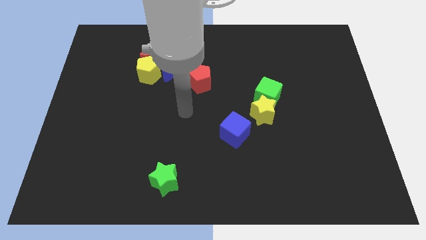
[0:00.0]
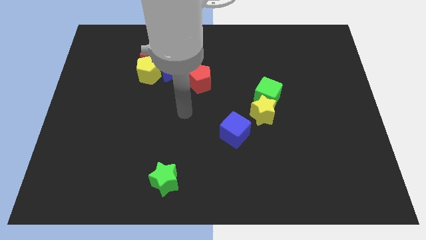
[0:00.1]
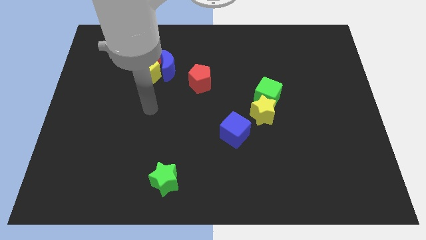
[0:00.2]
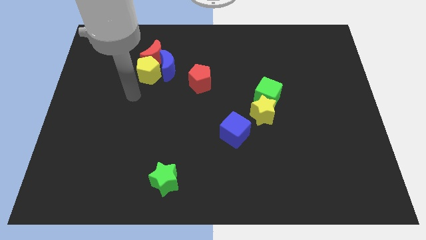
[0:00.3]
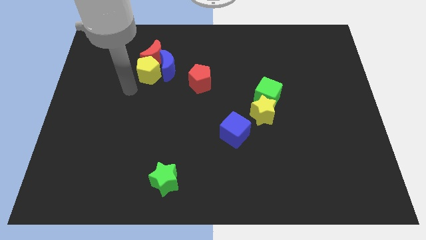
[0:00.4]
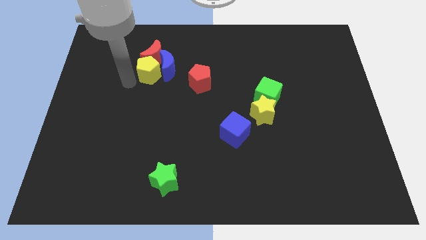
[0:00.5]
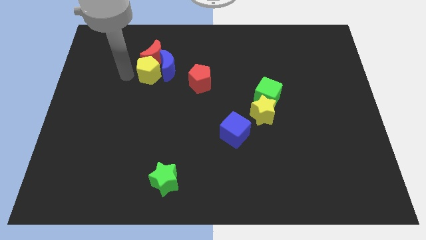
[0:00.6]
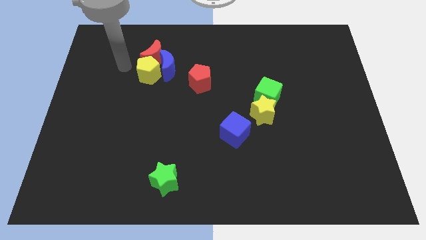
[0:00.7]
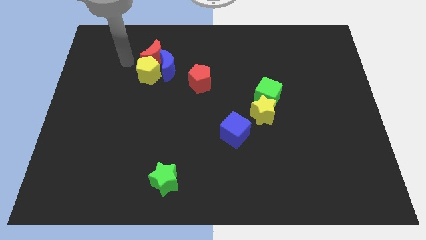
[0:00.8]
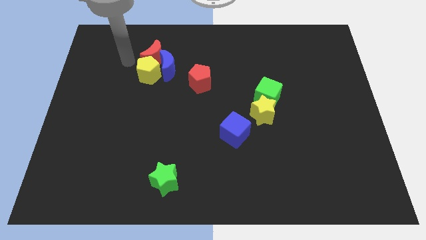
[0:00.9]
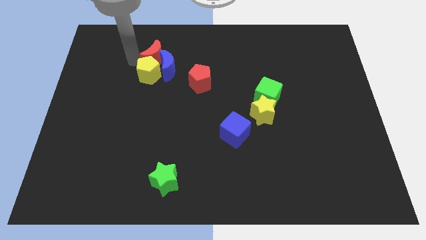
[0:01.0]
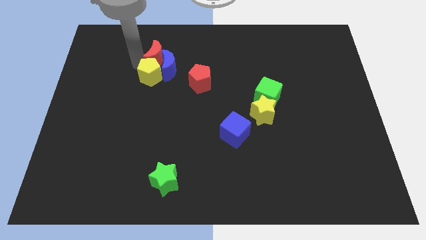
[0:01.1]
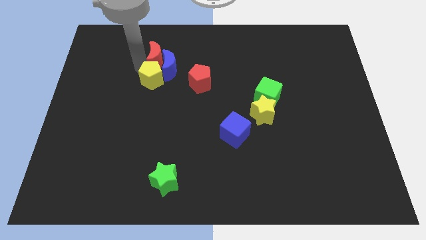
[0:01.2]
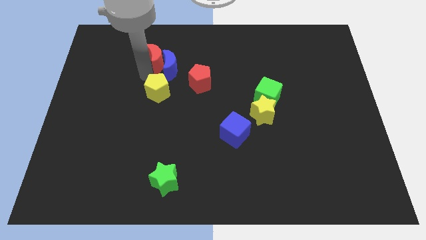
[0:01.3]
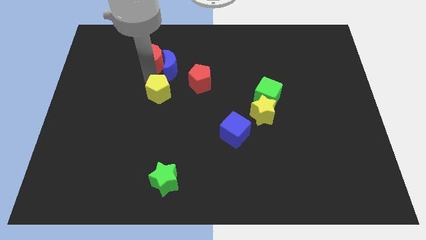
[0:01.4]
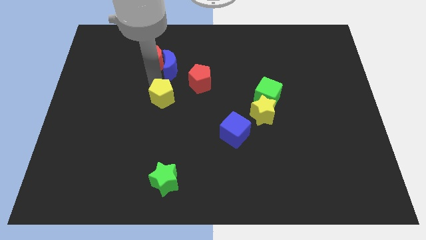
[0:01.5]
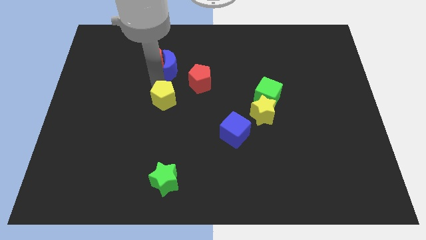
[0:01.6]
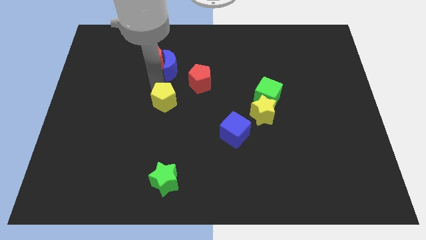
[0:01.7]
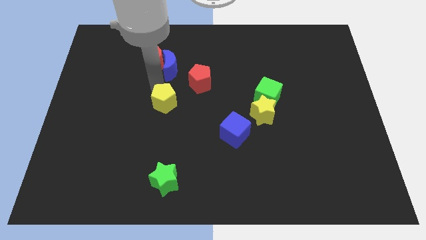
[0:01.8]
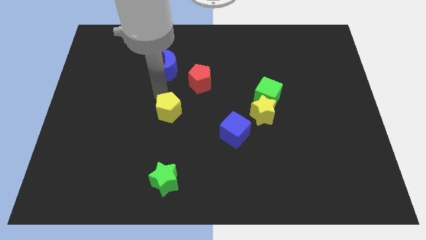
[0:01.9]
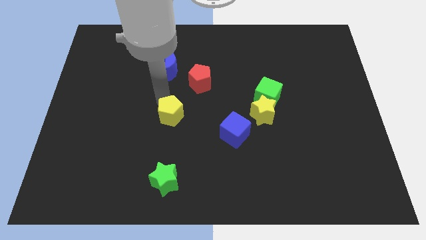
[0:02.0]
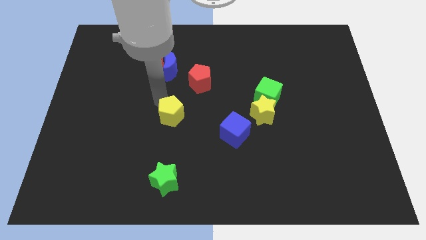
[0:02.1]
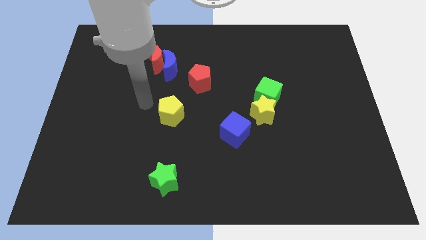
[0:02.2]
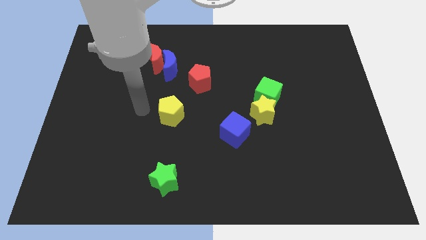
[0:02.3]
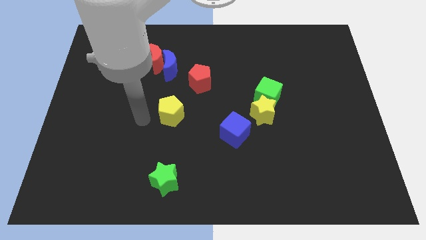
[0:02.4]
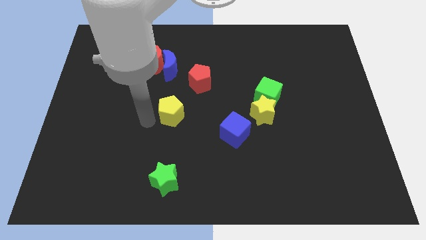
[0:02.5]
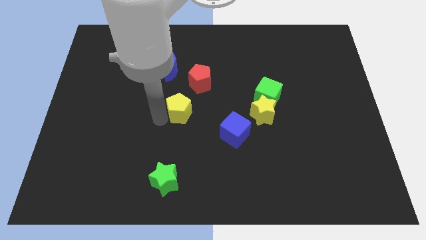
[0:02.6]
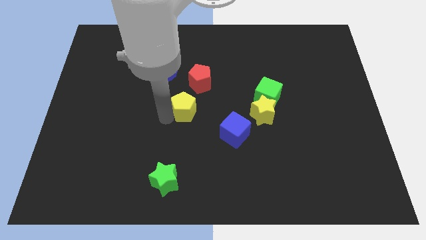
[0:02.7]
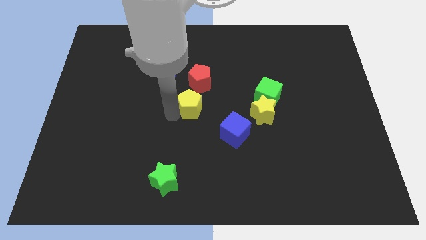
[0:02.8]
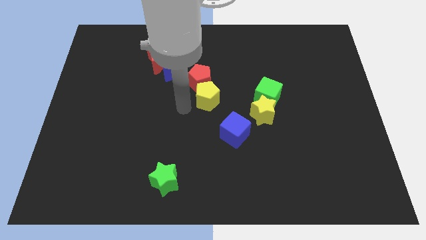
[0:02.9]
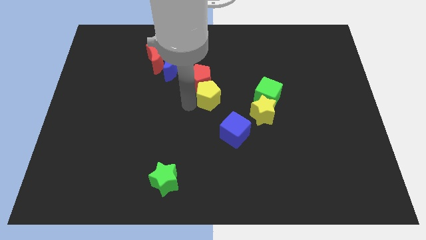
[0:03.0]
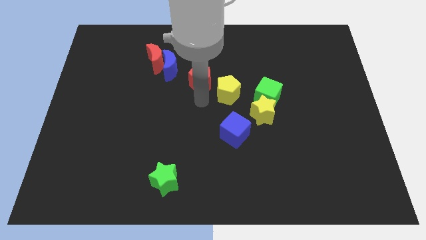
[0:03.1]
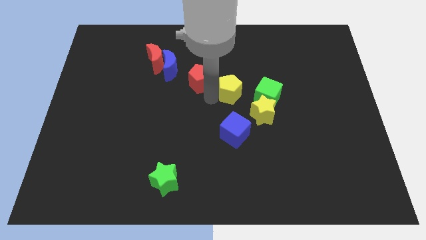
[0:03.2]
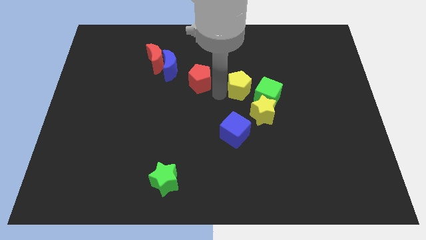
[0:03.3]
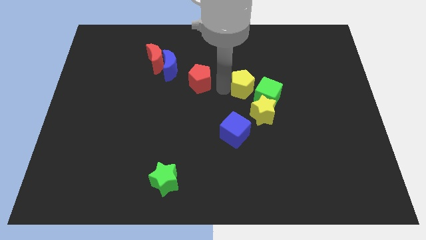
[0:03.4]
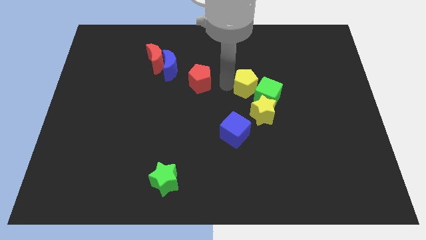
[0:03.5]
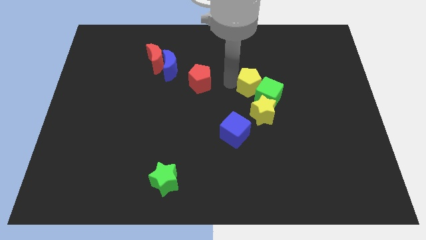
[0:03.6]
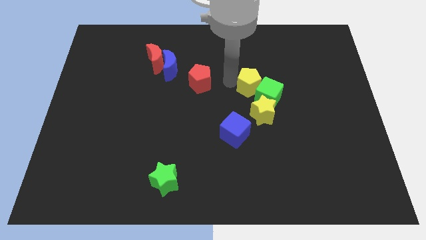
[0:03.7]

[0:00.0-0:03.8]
move the yellow pentagon to the green cube

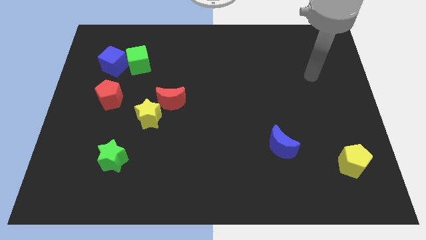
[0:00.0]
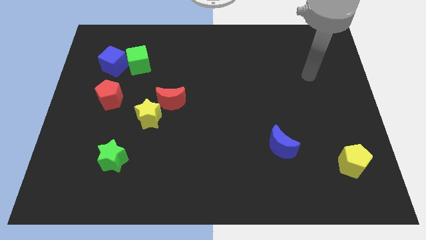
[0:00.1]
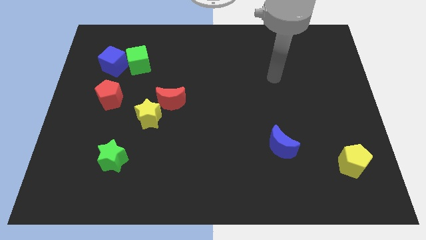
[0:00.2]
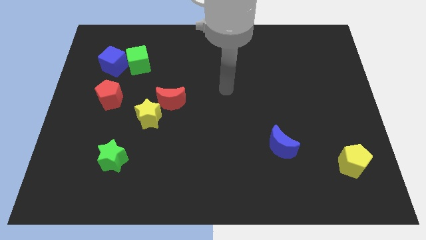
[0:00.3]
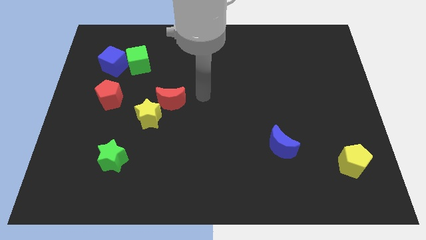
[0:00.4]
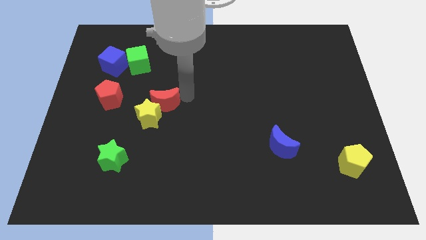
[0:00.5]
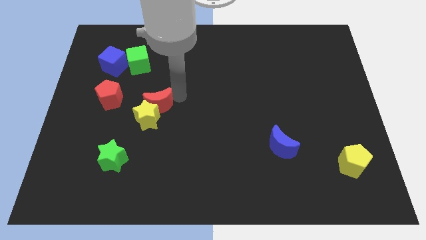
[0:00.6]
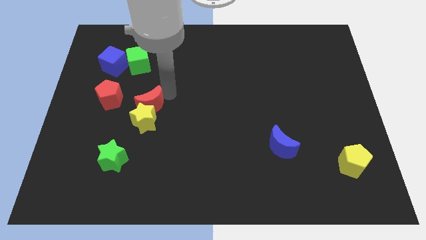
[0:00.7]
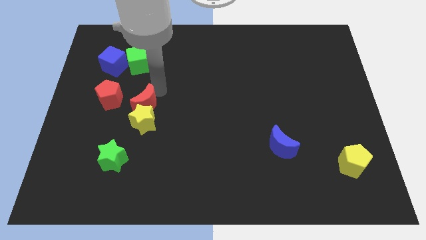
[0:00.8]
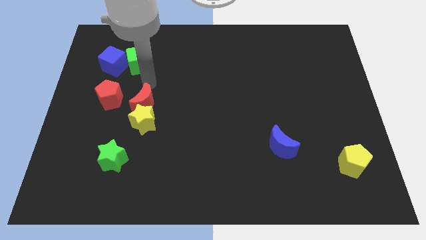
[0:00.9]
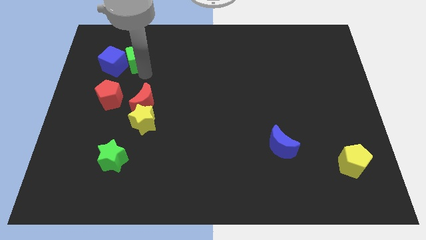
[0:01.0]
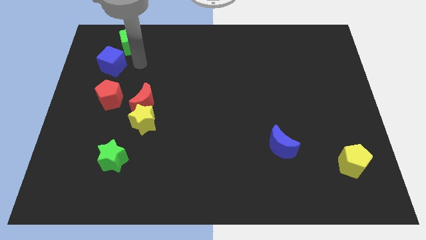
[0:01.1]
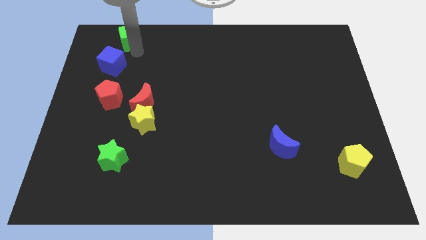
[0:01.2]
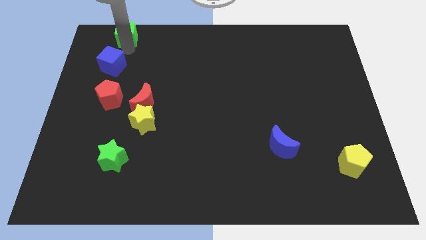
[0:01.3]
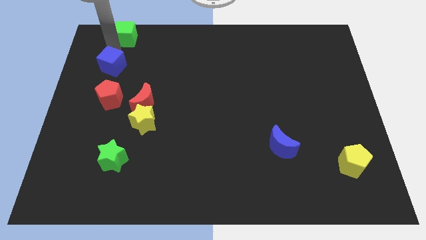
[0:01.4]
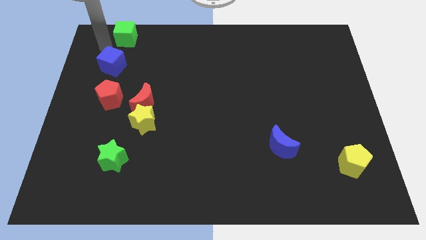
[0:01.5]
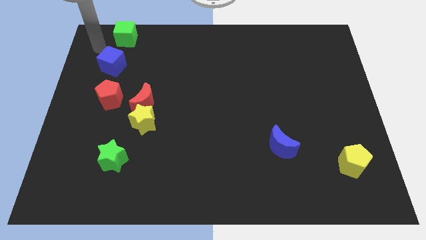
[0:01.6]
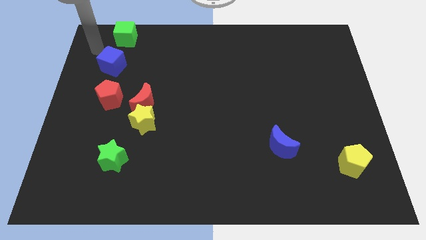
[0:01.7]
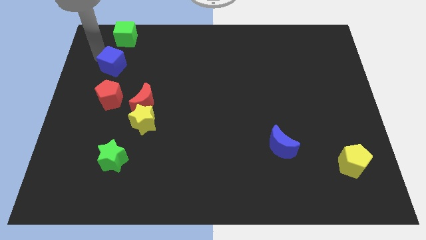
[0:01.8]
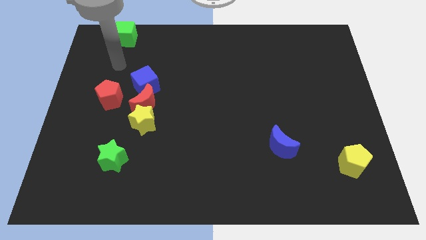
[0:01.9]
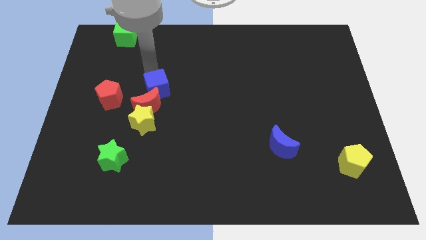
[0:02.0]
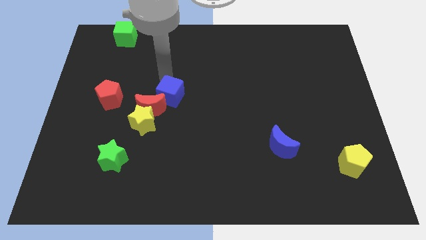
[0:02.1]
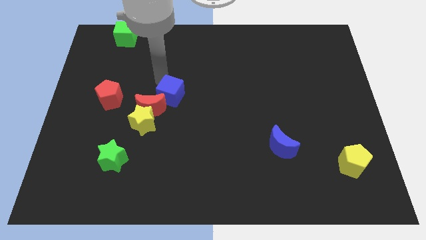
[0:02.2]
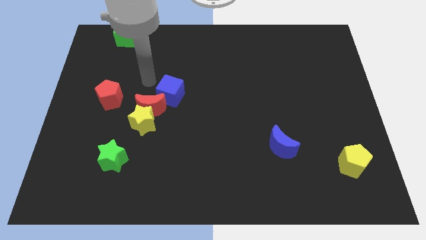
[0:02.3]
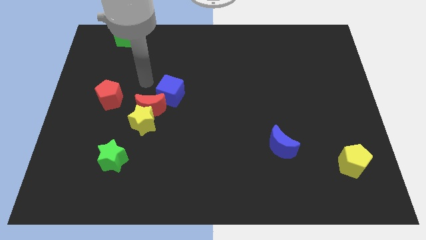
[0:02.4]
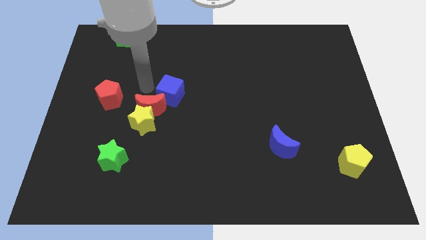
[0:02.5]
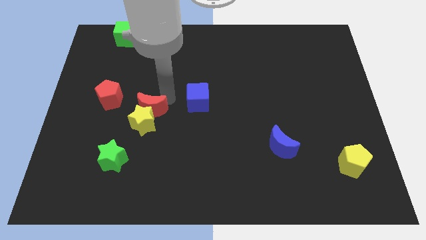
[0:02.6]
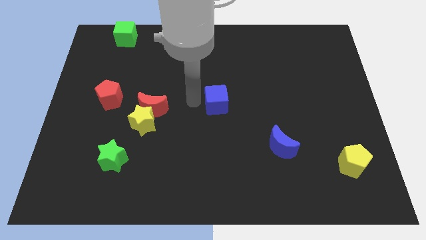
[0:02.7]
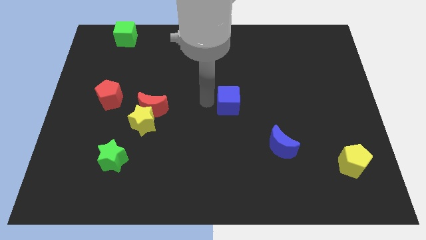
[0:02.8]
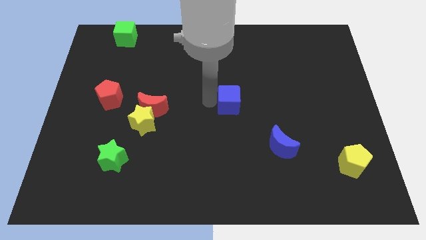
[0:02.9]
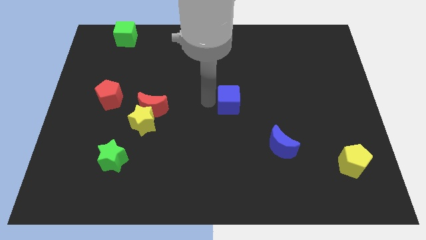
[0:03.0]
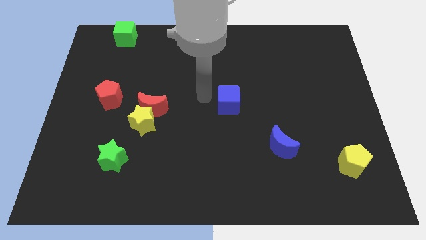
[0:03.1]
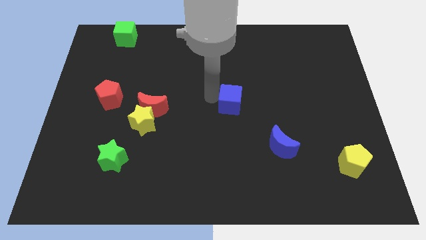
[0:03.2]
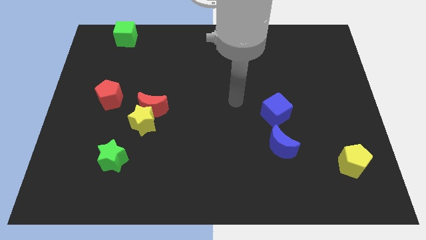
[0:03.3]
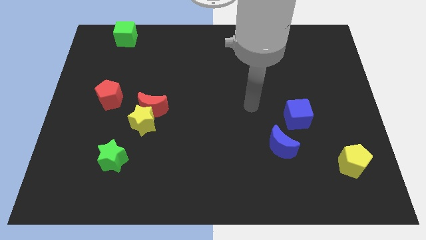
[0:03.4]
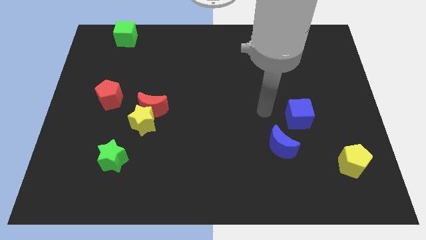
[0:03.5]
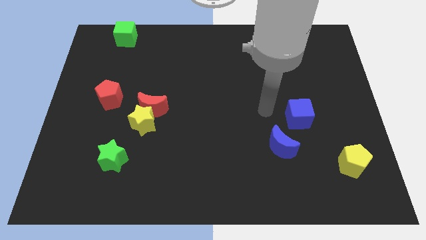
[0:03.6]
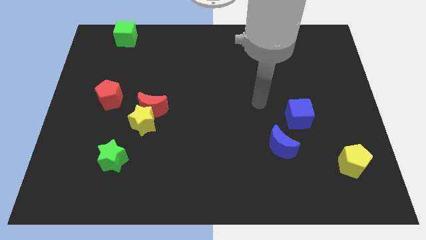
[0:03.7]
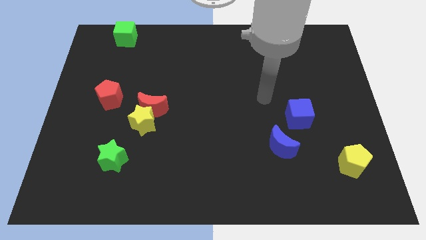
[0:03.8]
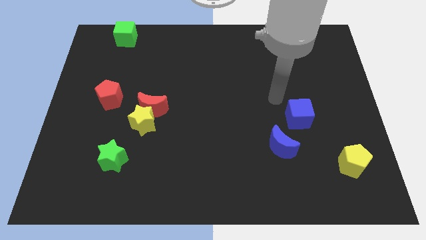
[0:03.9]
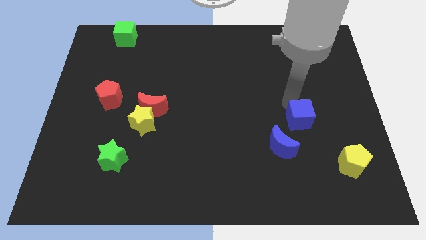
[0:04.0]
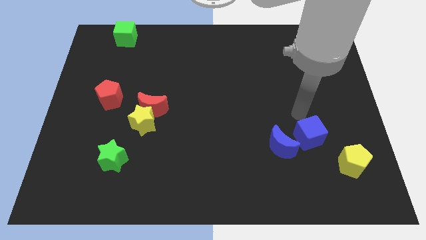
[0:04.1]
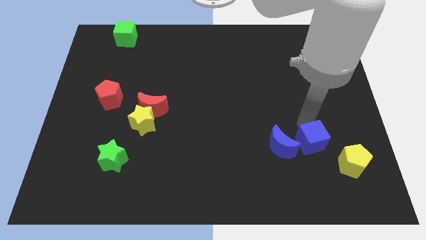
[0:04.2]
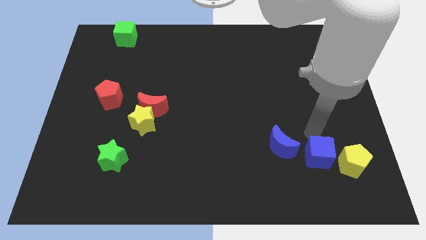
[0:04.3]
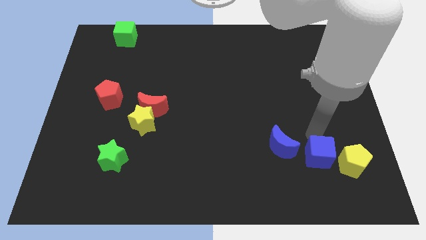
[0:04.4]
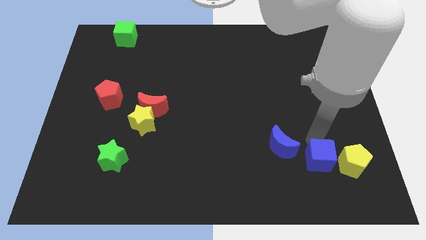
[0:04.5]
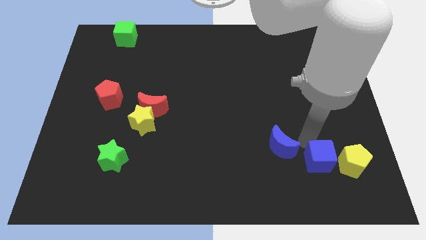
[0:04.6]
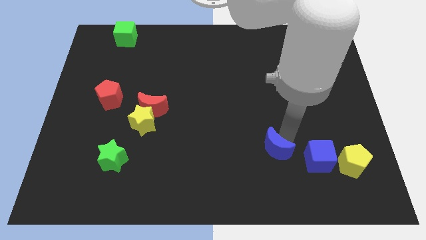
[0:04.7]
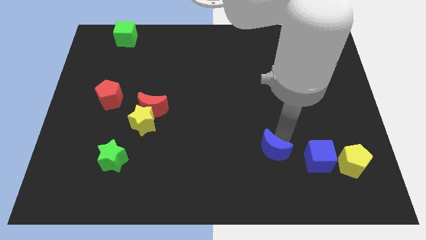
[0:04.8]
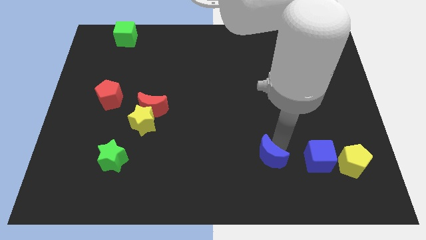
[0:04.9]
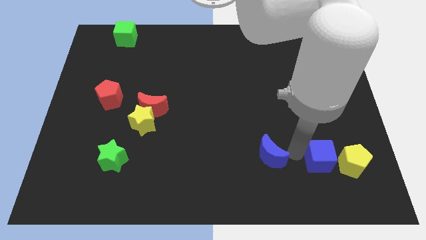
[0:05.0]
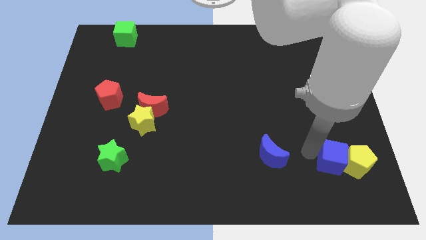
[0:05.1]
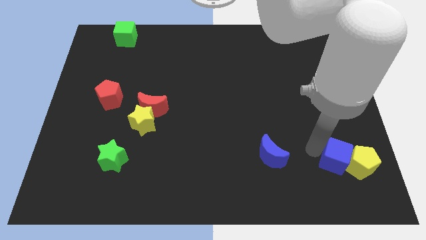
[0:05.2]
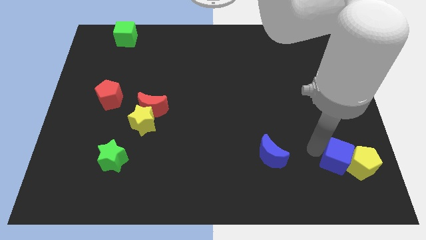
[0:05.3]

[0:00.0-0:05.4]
put the blue cube to the yellow pentagon
